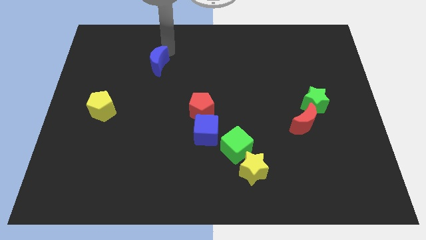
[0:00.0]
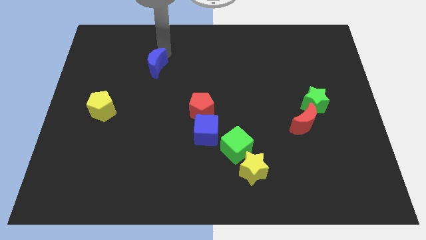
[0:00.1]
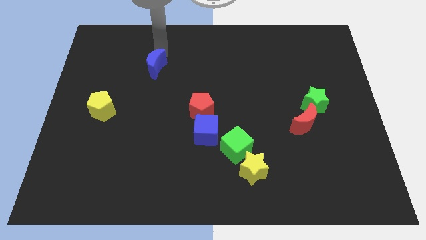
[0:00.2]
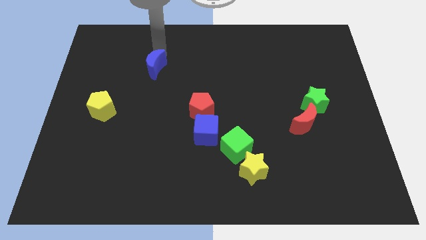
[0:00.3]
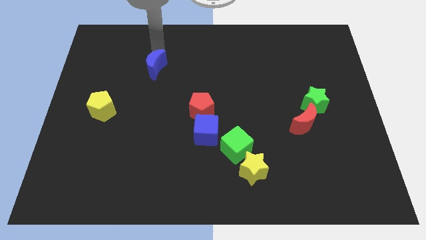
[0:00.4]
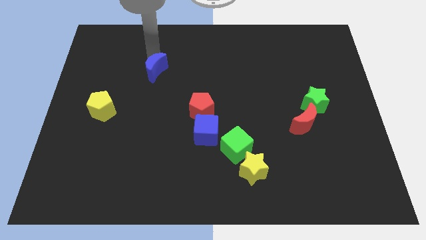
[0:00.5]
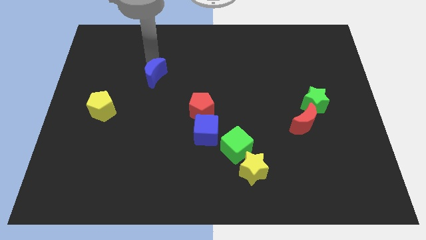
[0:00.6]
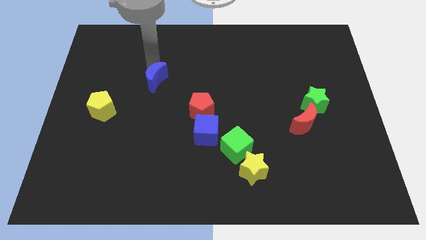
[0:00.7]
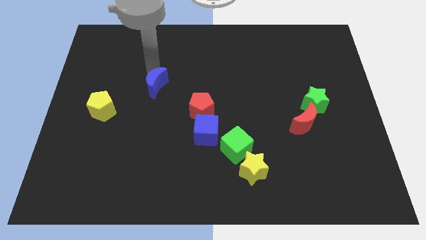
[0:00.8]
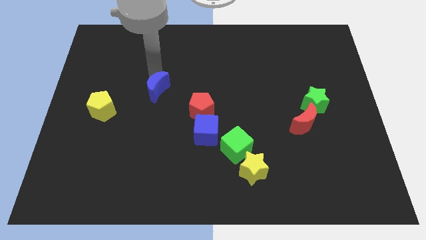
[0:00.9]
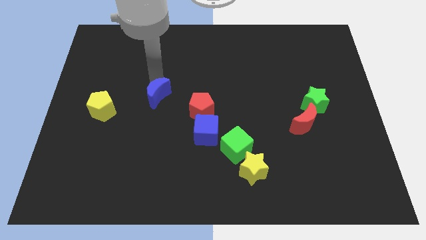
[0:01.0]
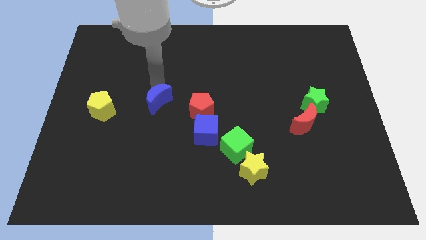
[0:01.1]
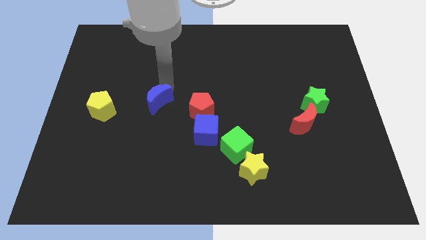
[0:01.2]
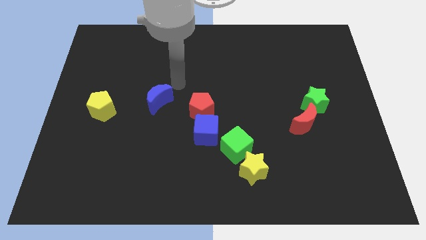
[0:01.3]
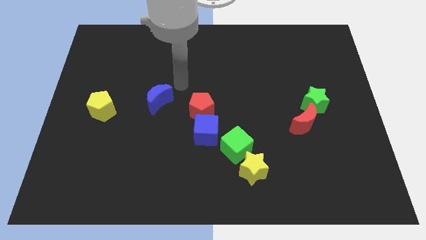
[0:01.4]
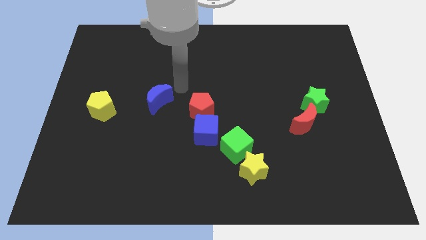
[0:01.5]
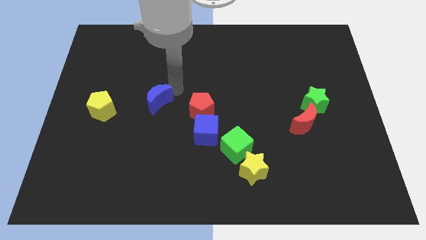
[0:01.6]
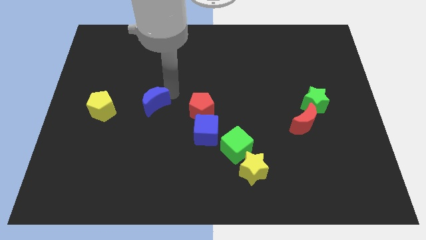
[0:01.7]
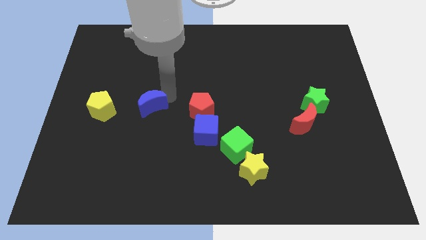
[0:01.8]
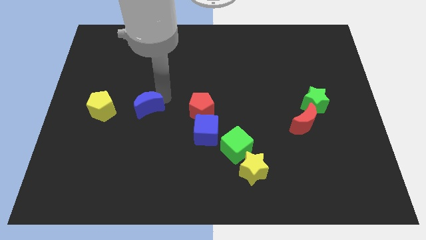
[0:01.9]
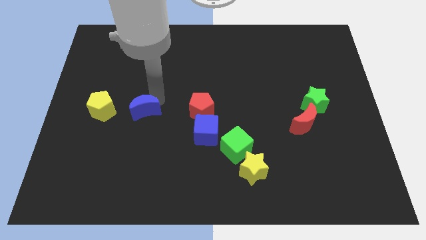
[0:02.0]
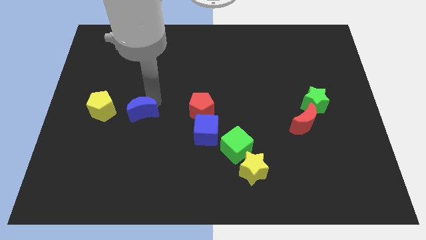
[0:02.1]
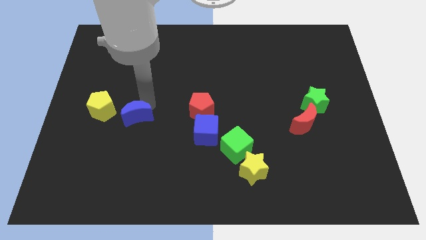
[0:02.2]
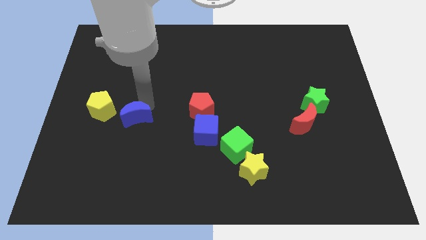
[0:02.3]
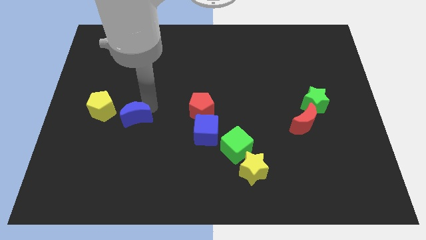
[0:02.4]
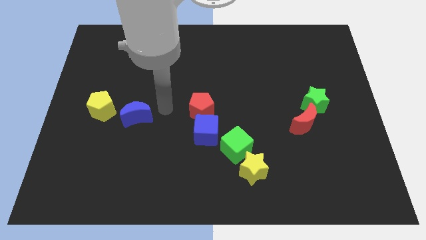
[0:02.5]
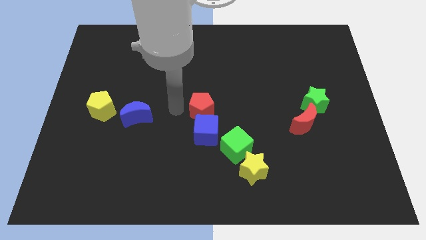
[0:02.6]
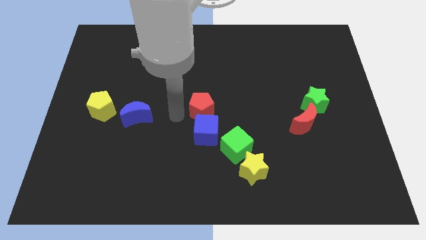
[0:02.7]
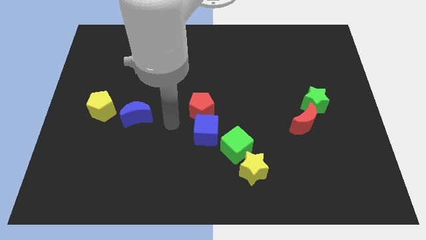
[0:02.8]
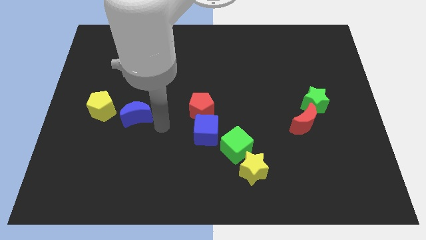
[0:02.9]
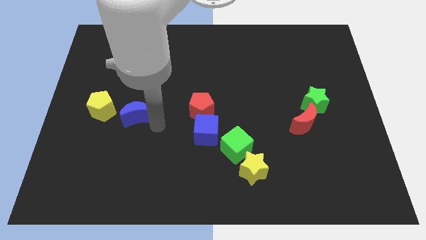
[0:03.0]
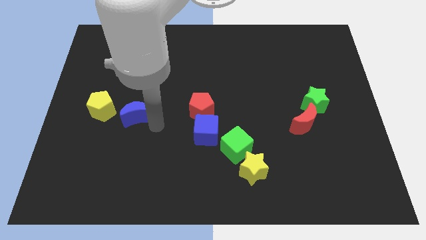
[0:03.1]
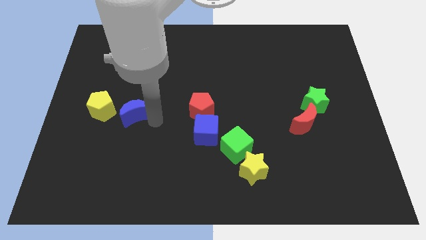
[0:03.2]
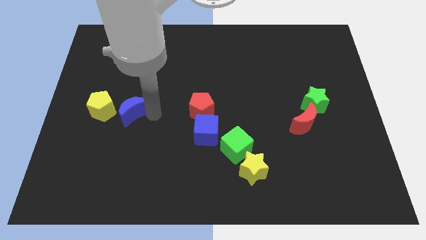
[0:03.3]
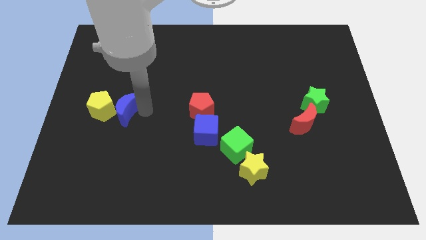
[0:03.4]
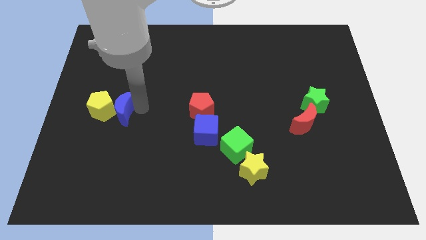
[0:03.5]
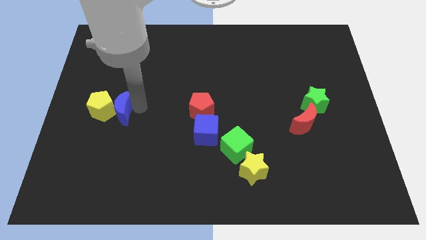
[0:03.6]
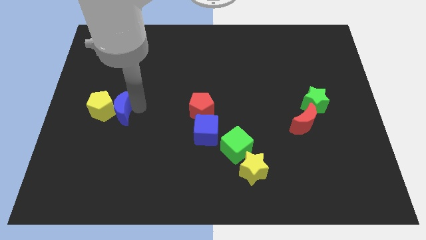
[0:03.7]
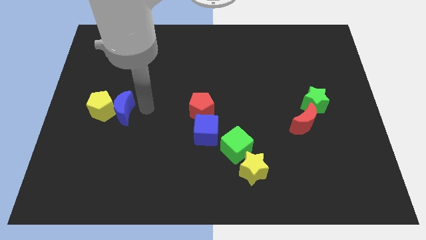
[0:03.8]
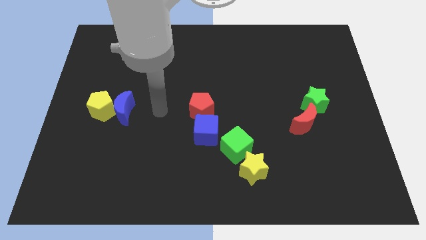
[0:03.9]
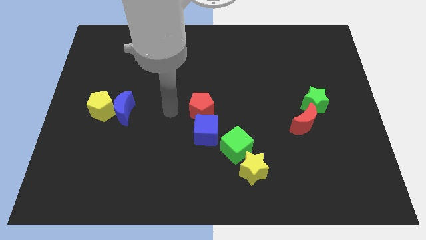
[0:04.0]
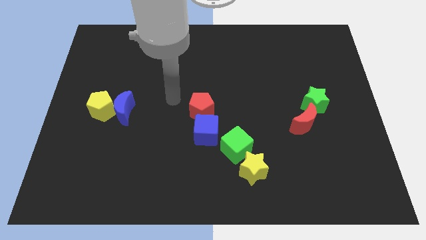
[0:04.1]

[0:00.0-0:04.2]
push the blue crescent close to the yellow pentagon

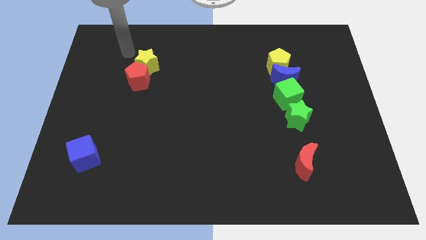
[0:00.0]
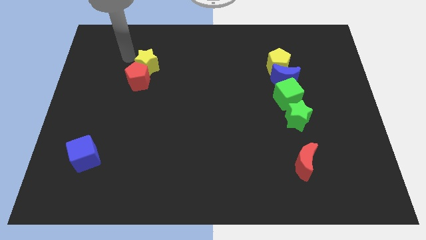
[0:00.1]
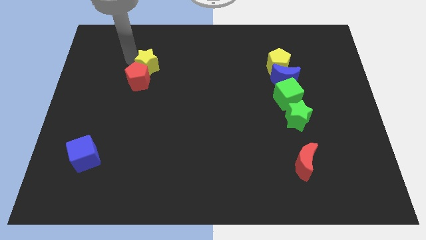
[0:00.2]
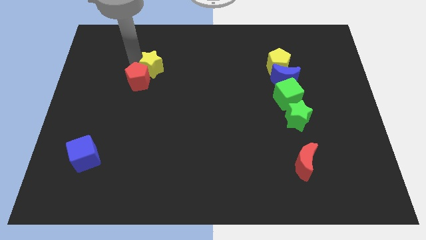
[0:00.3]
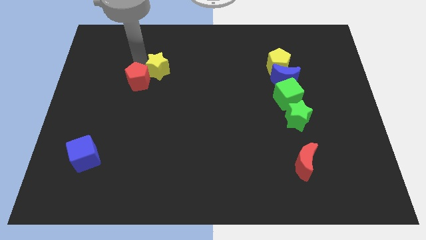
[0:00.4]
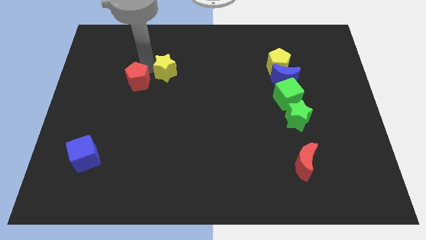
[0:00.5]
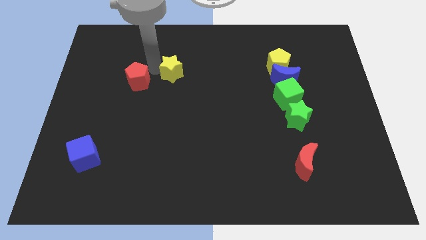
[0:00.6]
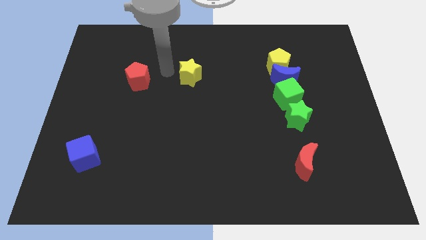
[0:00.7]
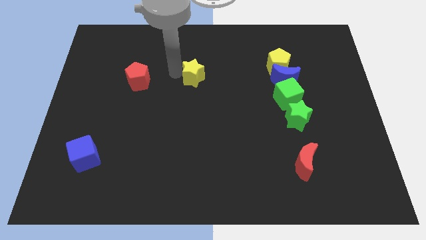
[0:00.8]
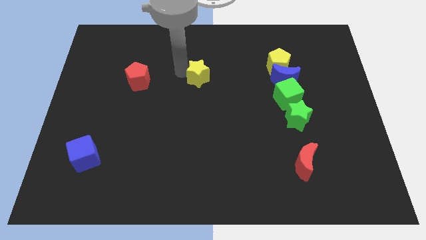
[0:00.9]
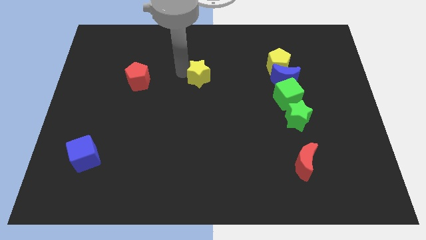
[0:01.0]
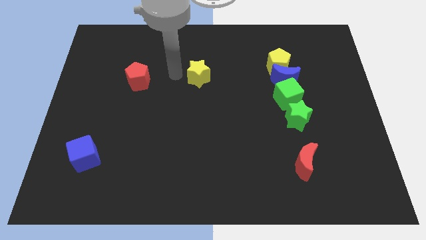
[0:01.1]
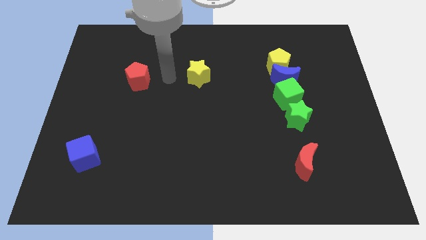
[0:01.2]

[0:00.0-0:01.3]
move the yellow star to the center of the board

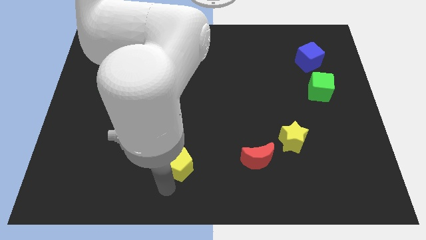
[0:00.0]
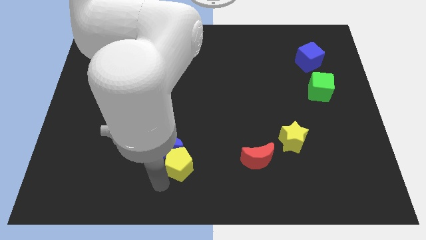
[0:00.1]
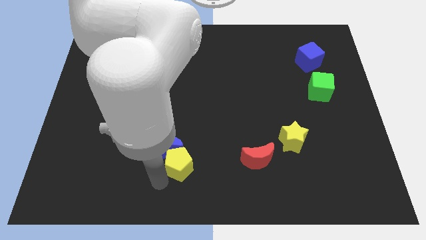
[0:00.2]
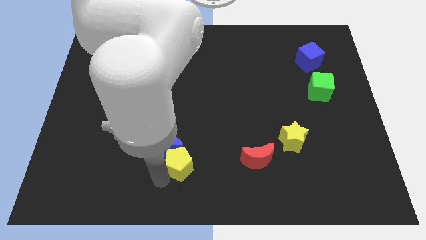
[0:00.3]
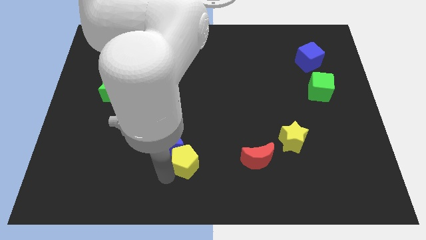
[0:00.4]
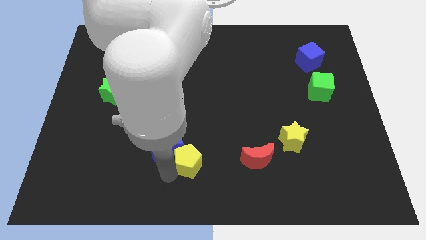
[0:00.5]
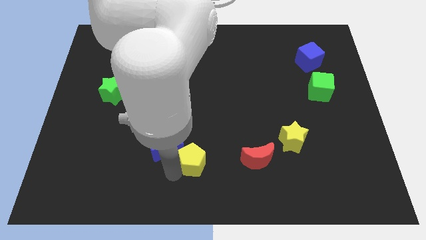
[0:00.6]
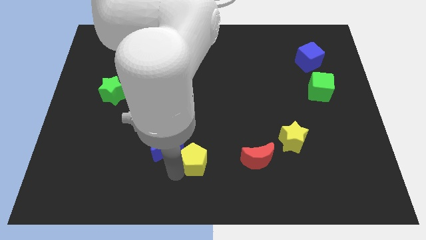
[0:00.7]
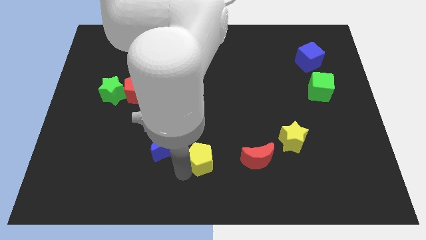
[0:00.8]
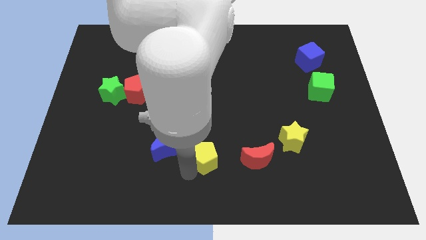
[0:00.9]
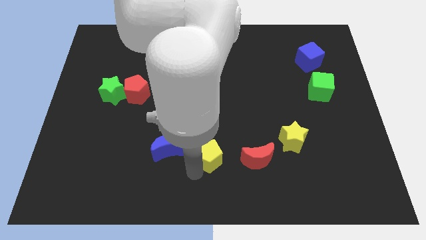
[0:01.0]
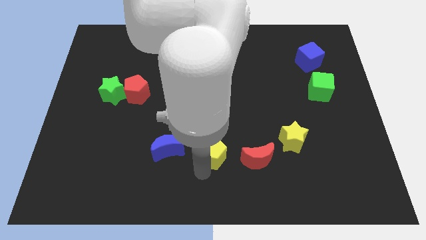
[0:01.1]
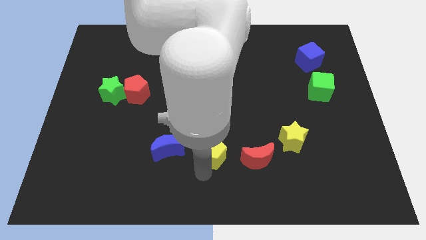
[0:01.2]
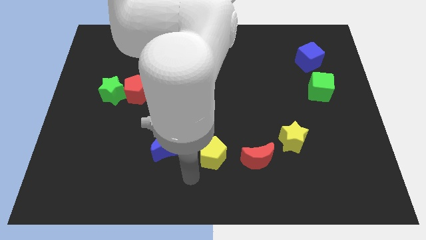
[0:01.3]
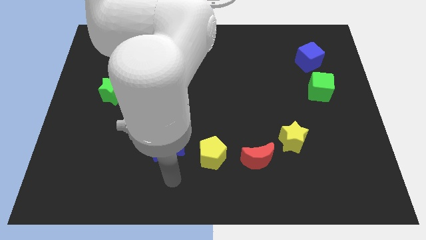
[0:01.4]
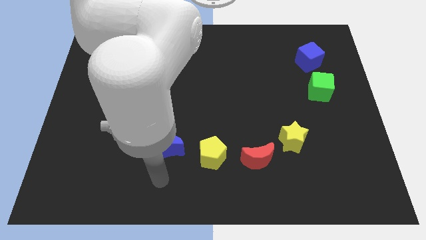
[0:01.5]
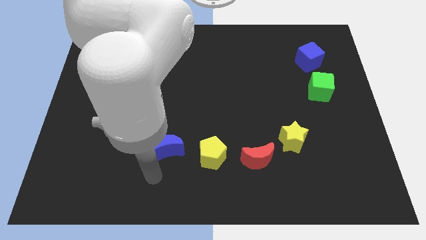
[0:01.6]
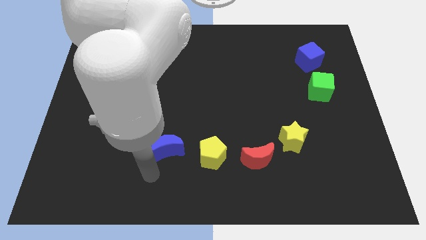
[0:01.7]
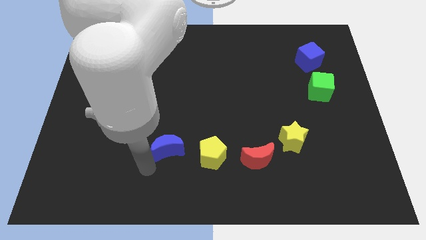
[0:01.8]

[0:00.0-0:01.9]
move the yellow pentagon slightly to the right

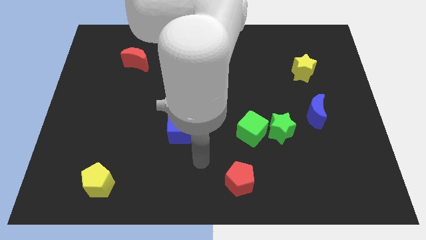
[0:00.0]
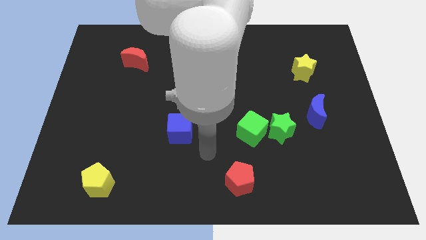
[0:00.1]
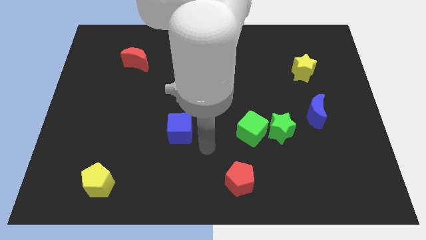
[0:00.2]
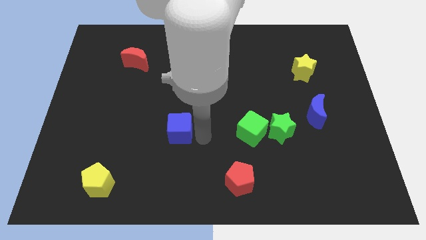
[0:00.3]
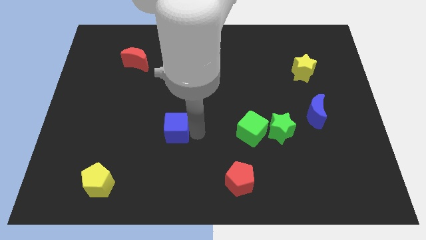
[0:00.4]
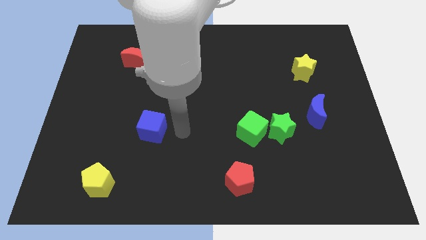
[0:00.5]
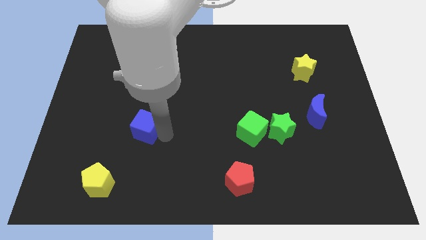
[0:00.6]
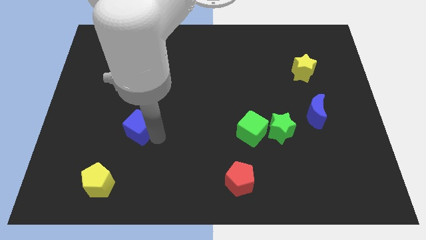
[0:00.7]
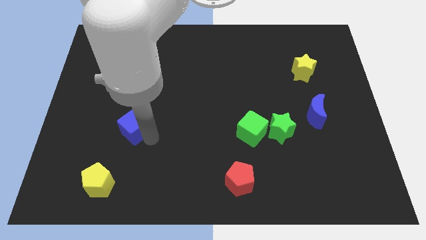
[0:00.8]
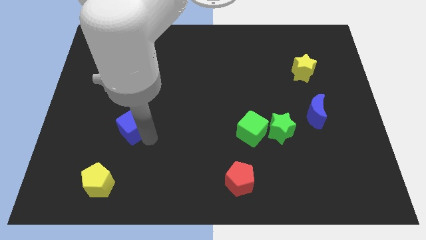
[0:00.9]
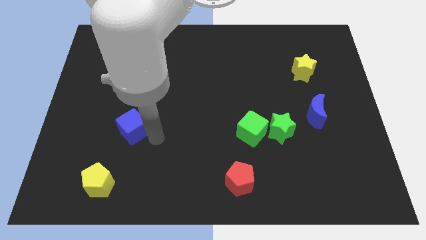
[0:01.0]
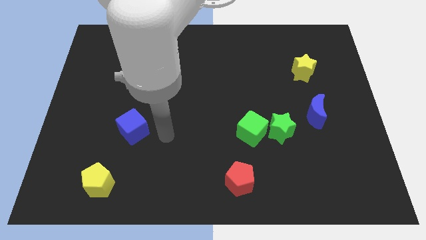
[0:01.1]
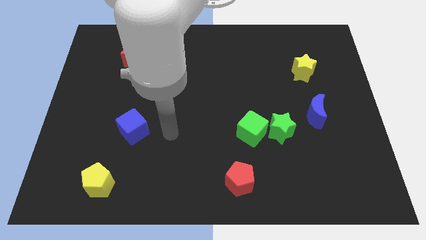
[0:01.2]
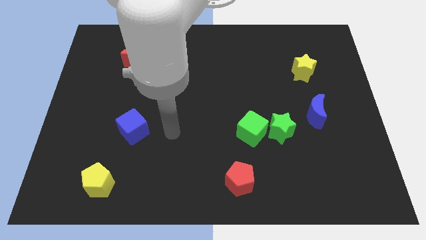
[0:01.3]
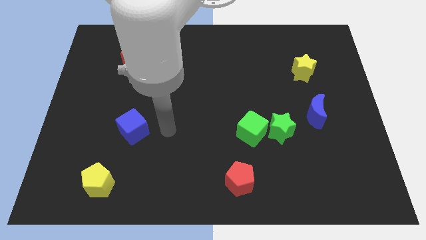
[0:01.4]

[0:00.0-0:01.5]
push the blue cube diagonally on the top right side of the yellow pentagon
